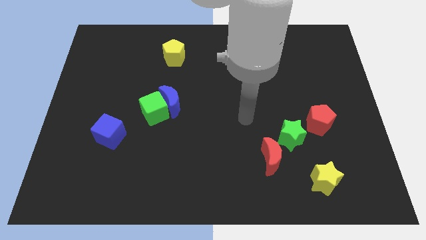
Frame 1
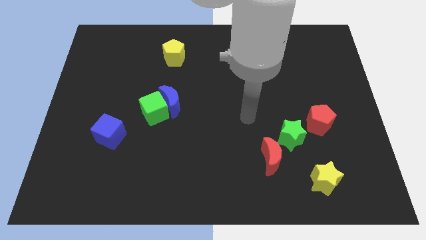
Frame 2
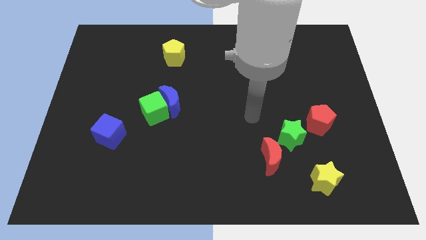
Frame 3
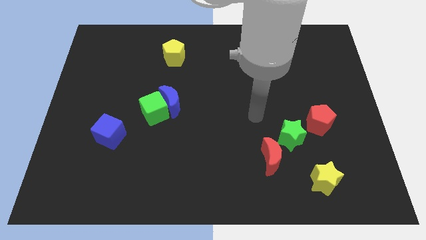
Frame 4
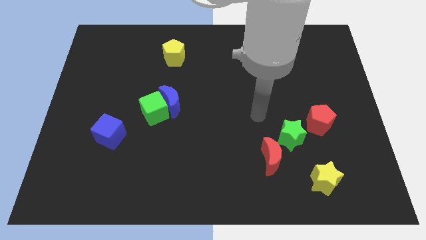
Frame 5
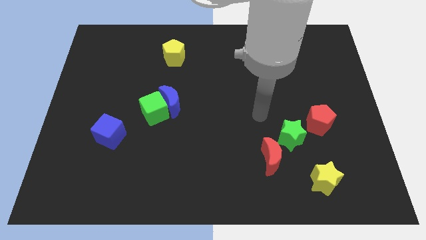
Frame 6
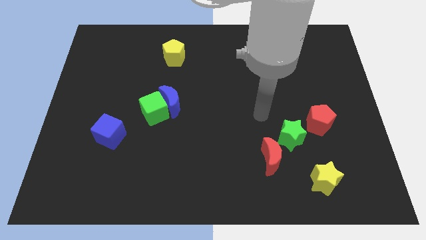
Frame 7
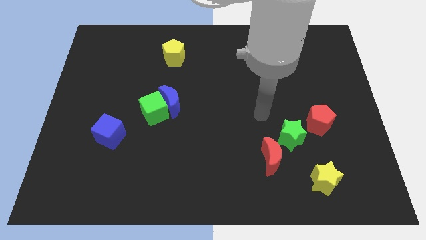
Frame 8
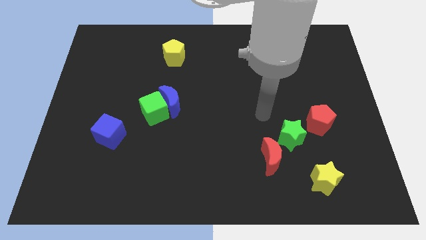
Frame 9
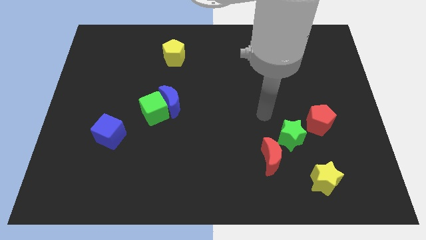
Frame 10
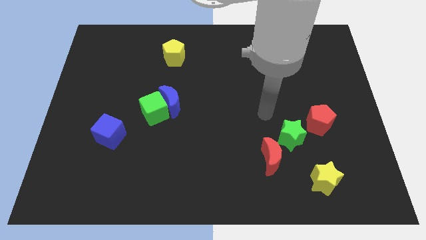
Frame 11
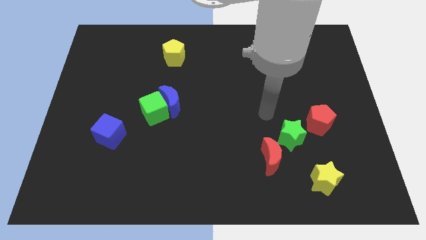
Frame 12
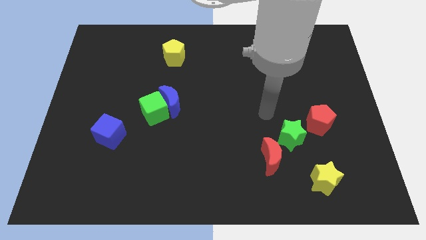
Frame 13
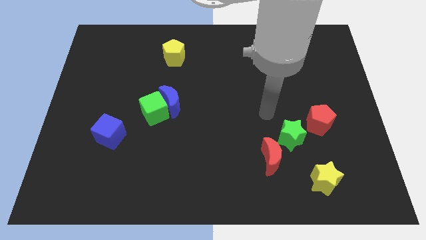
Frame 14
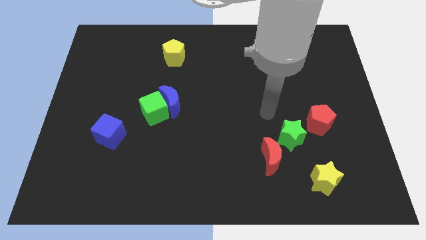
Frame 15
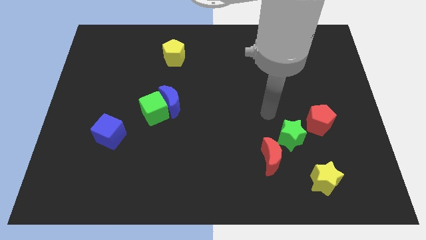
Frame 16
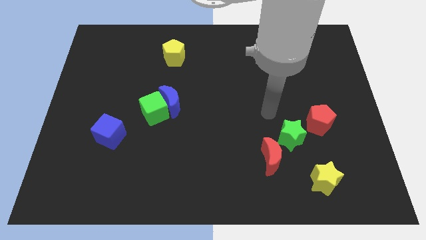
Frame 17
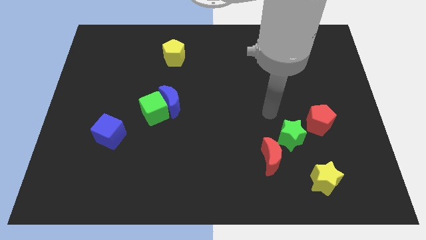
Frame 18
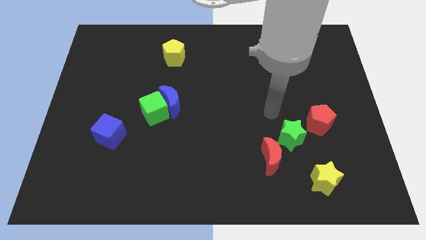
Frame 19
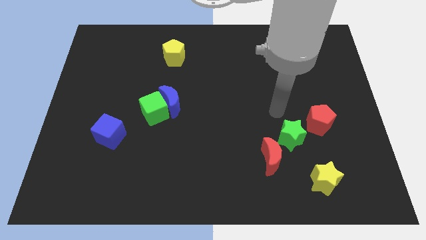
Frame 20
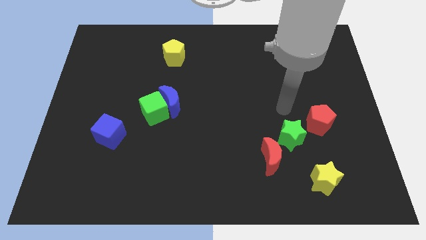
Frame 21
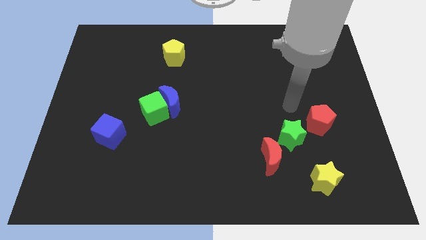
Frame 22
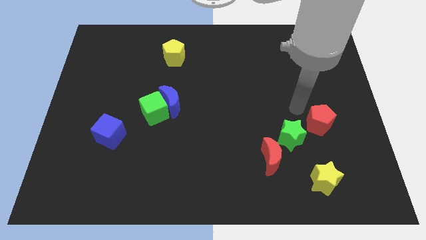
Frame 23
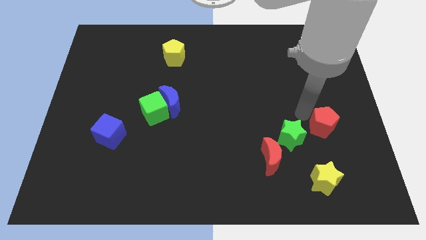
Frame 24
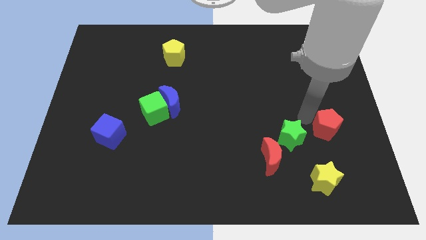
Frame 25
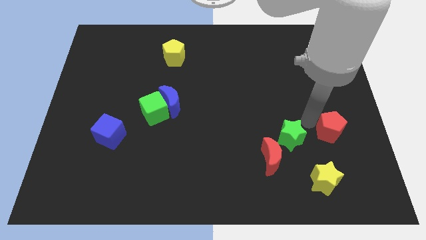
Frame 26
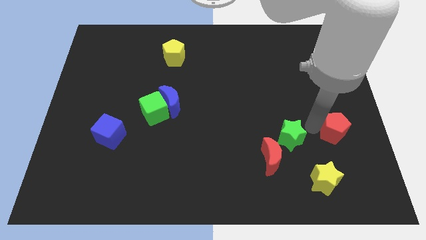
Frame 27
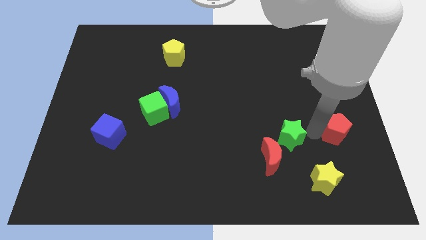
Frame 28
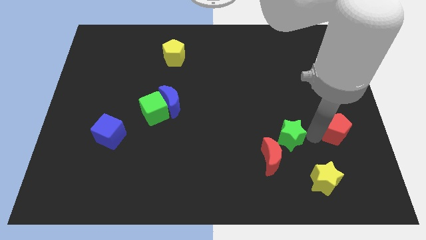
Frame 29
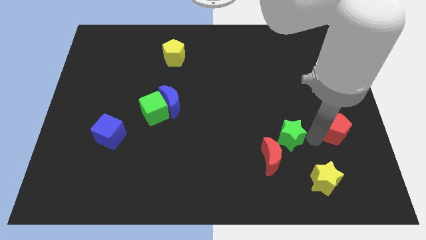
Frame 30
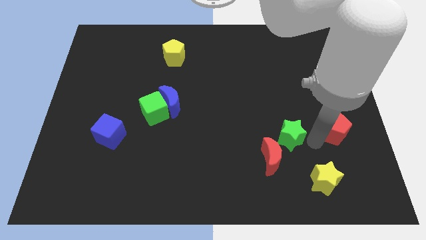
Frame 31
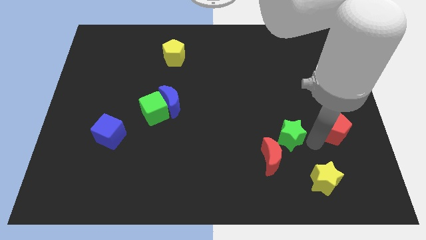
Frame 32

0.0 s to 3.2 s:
push the red pentagon slightly to right side

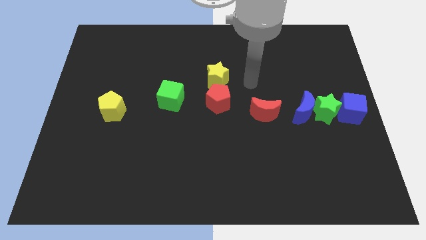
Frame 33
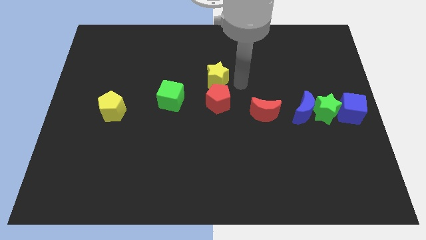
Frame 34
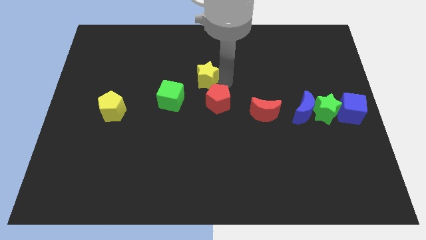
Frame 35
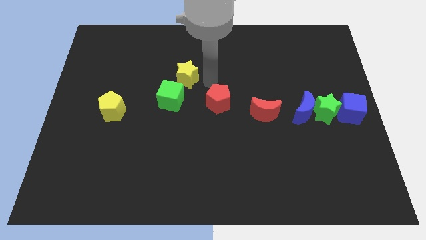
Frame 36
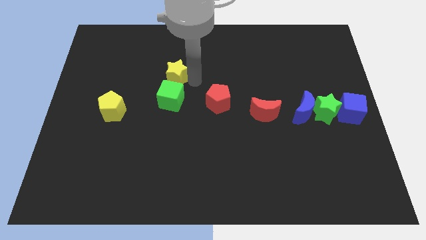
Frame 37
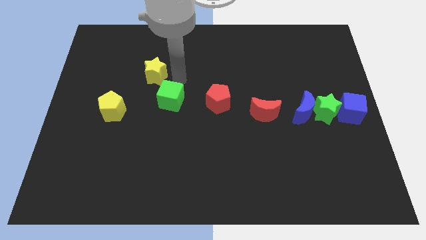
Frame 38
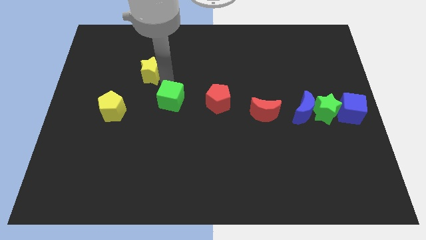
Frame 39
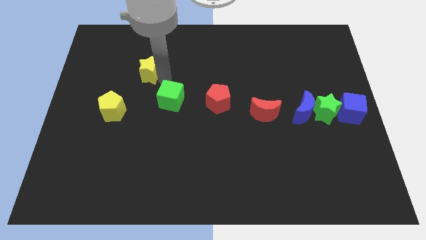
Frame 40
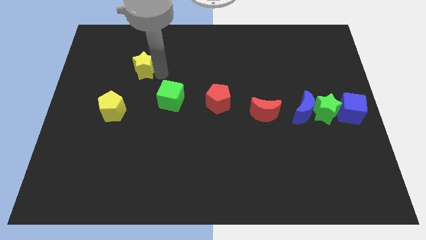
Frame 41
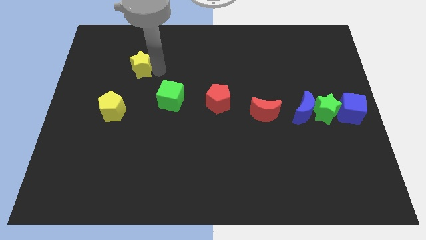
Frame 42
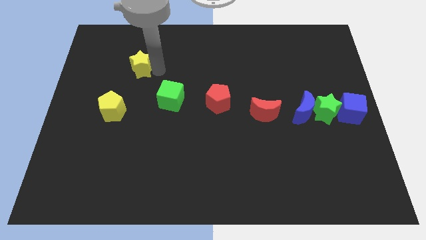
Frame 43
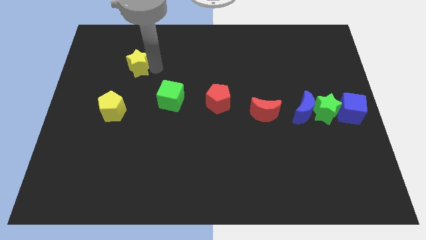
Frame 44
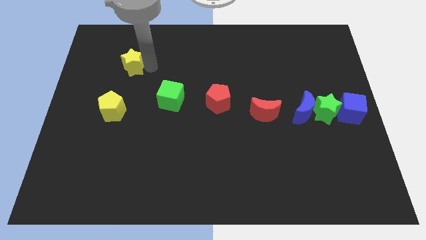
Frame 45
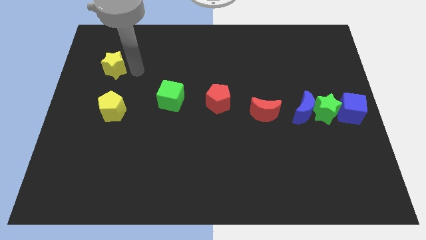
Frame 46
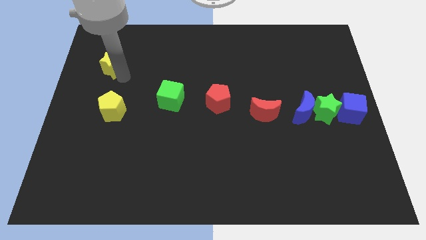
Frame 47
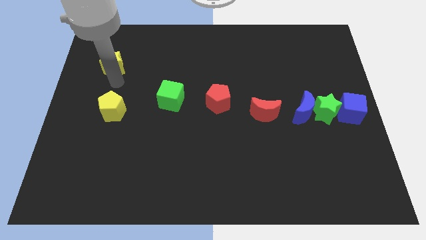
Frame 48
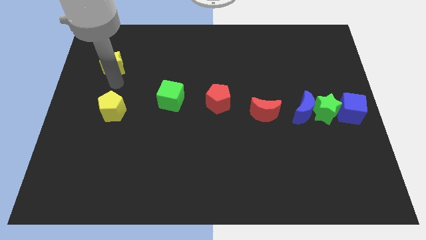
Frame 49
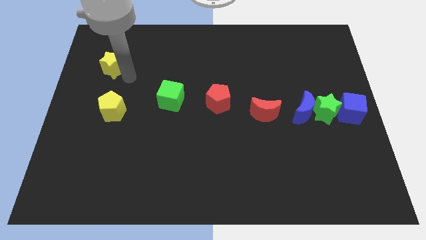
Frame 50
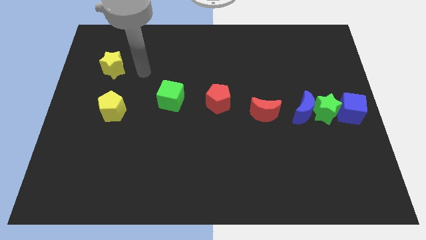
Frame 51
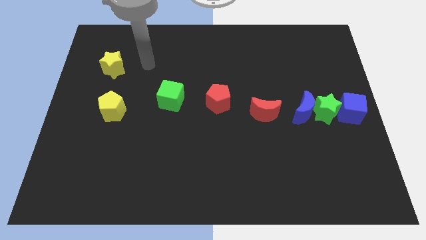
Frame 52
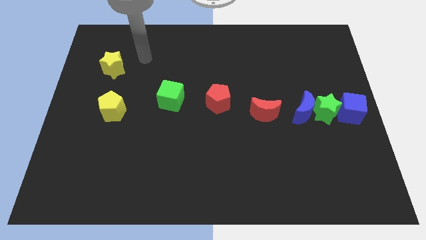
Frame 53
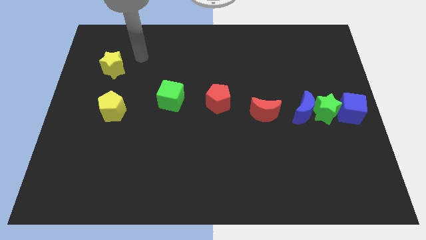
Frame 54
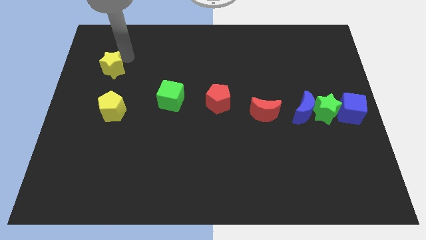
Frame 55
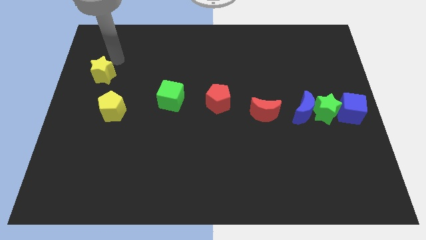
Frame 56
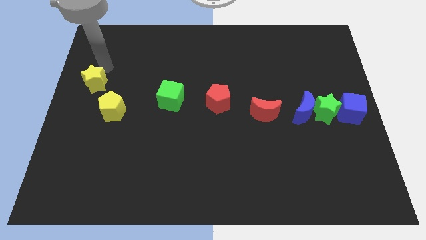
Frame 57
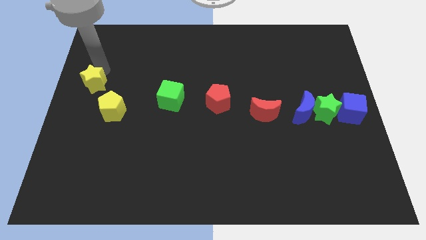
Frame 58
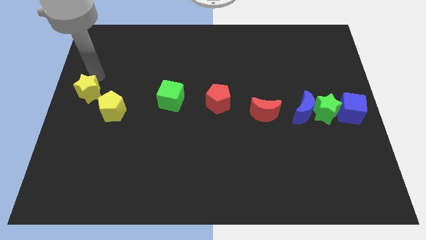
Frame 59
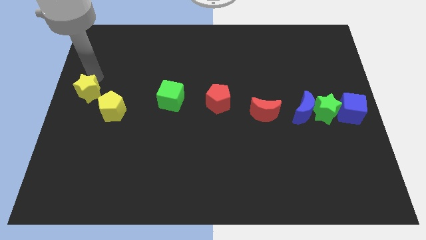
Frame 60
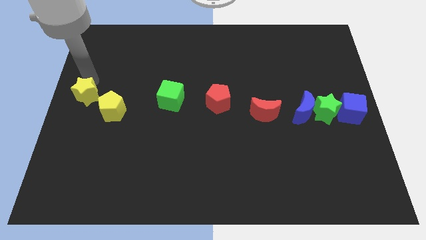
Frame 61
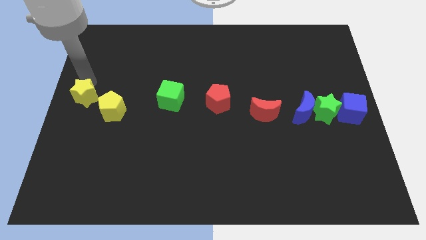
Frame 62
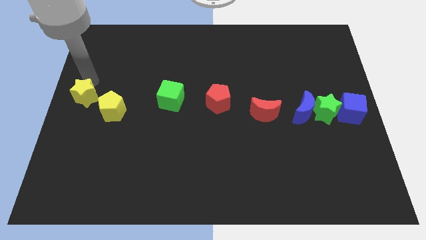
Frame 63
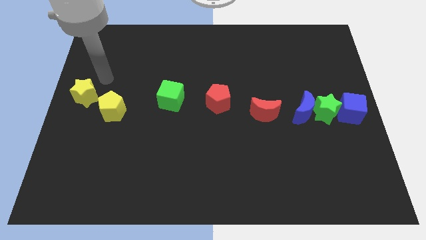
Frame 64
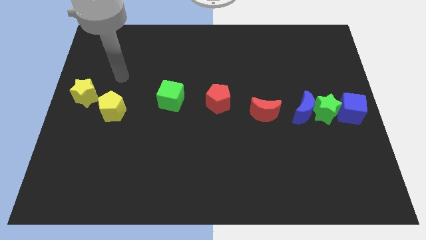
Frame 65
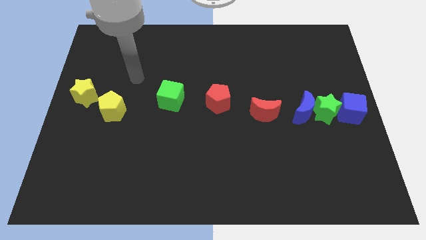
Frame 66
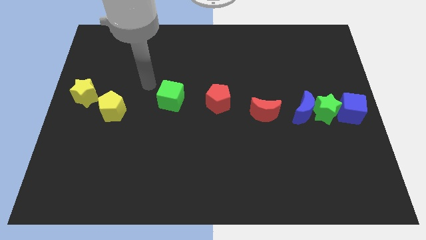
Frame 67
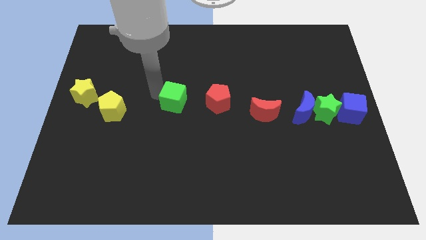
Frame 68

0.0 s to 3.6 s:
move yellow star at the center left

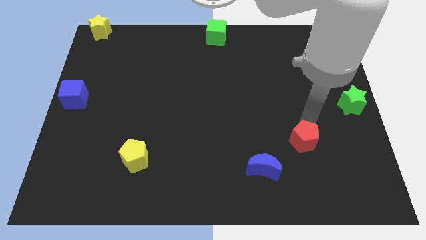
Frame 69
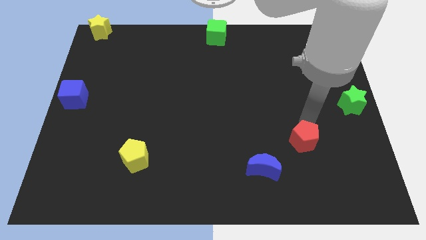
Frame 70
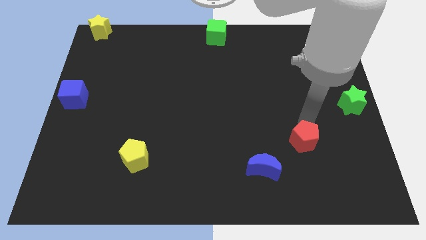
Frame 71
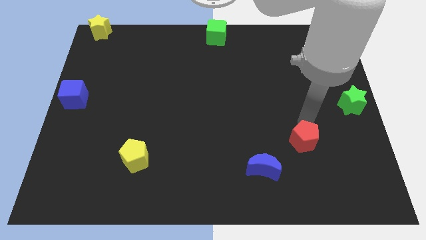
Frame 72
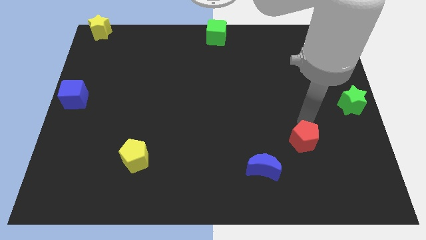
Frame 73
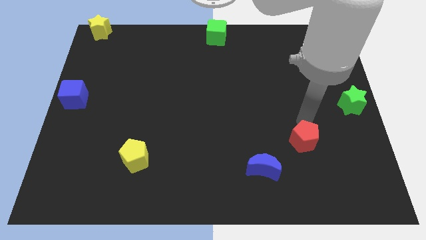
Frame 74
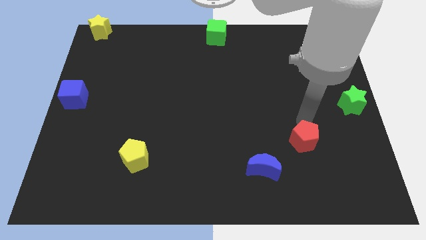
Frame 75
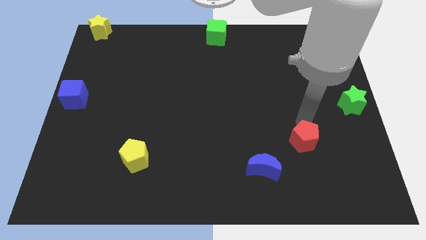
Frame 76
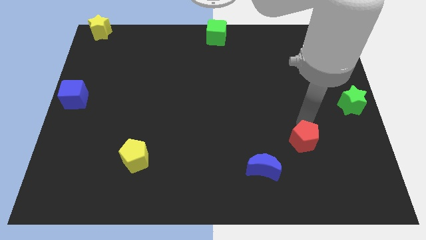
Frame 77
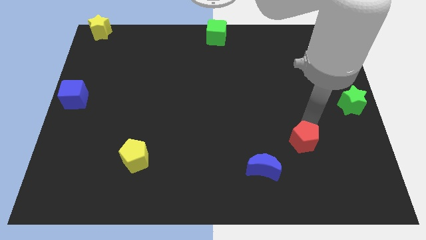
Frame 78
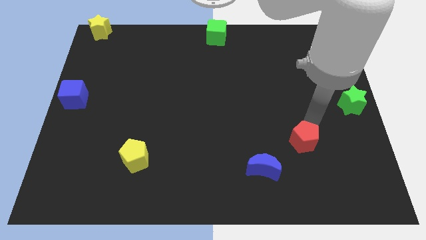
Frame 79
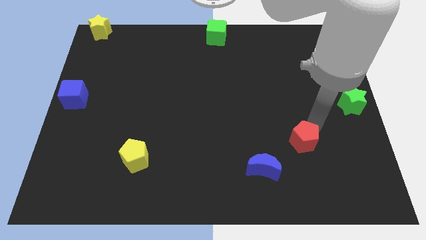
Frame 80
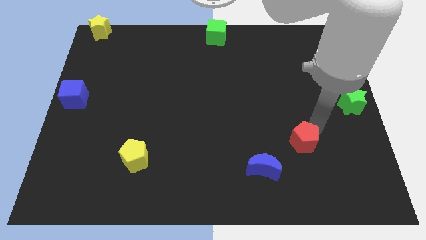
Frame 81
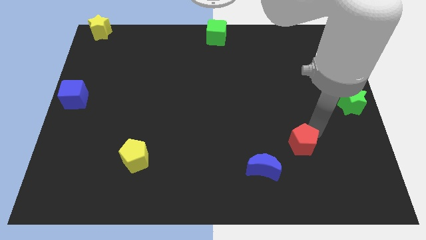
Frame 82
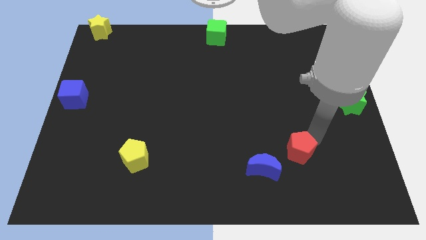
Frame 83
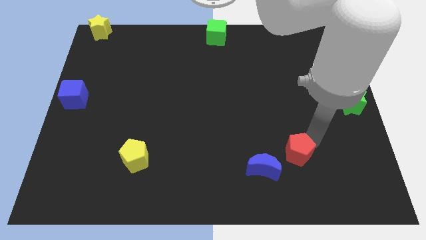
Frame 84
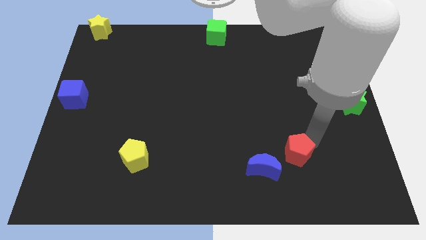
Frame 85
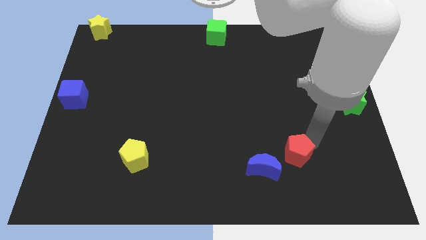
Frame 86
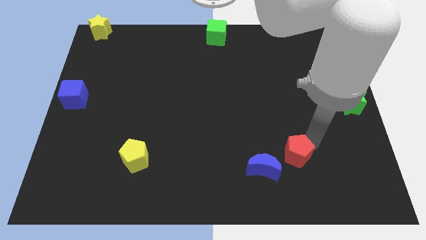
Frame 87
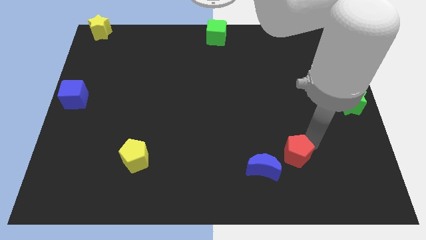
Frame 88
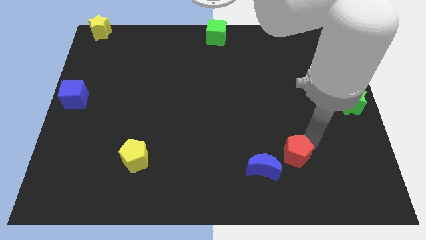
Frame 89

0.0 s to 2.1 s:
slide the red pentagon to the top right side of the blue moon

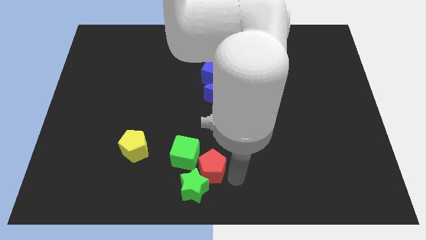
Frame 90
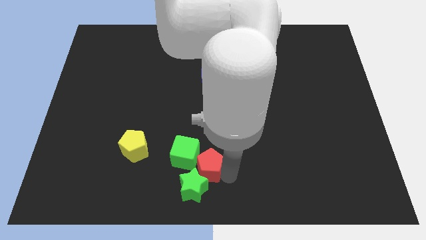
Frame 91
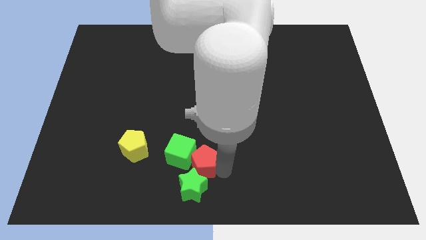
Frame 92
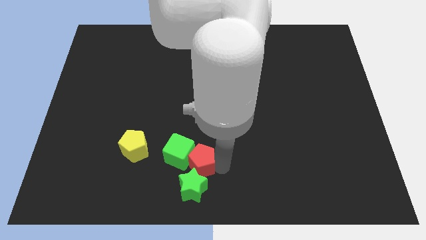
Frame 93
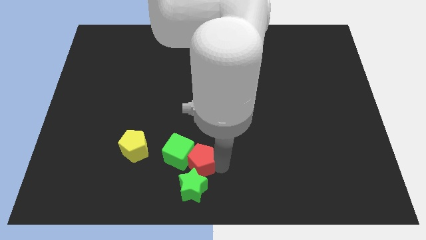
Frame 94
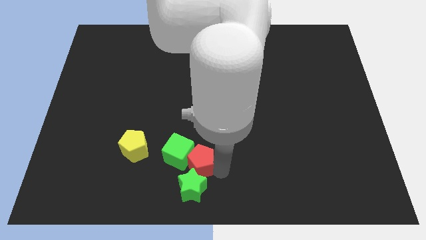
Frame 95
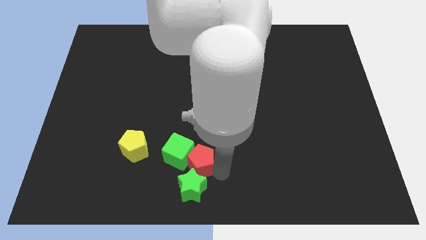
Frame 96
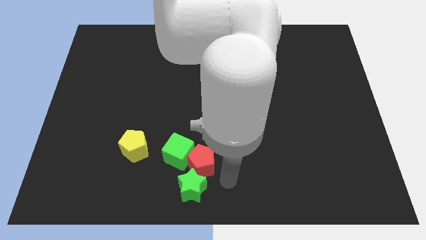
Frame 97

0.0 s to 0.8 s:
touch right to the red pentagon
